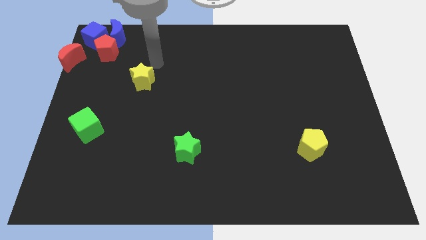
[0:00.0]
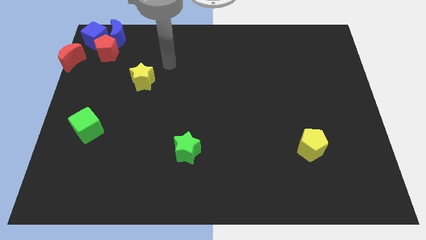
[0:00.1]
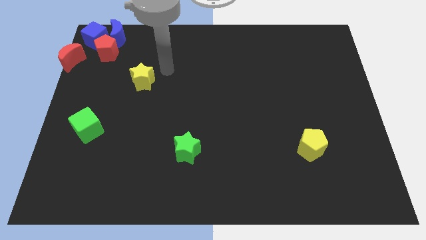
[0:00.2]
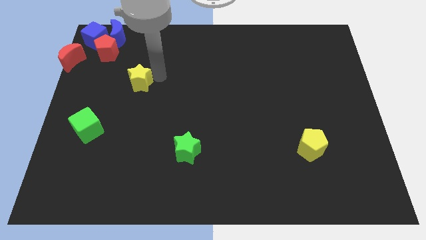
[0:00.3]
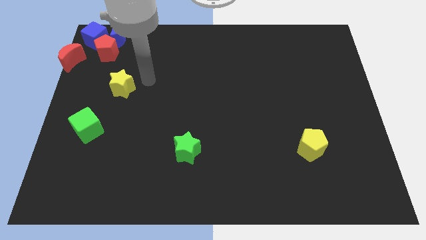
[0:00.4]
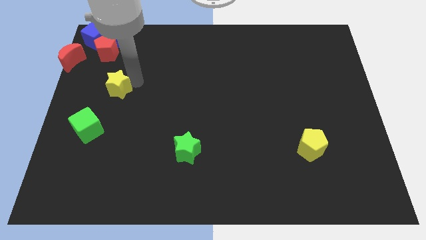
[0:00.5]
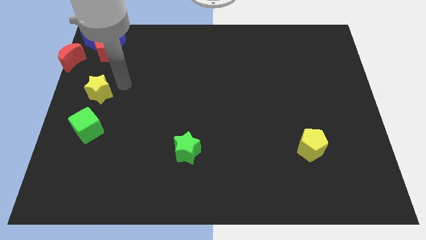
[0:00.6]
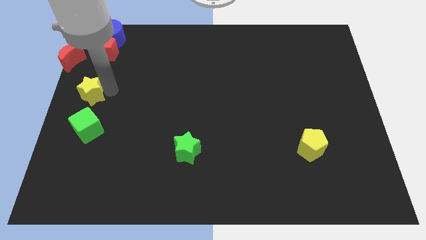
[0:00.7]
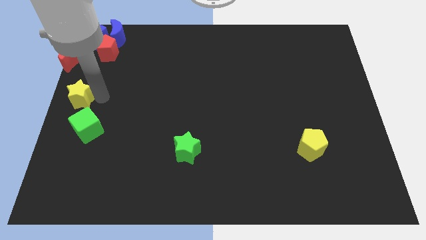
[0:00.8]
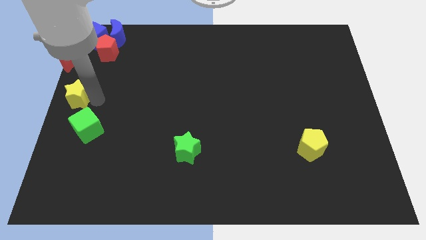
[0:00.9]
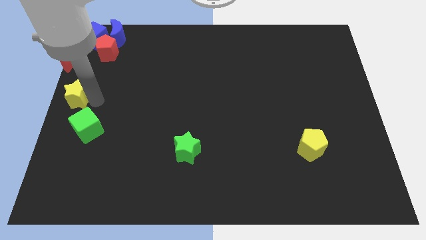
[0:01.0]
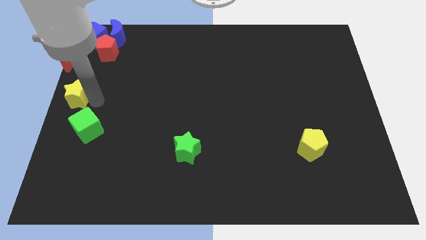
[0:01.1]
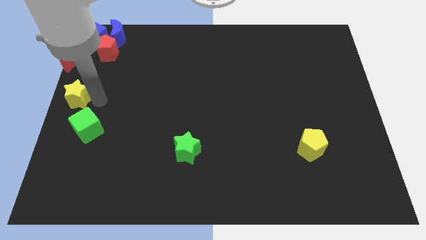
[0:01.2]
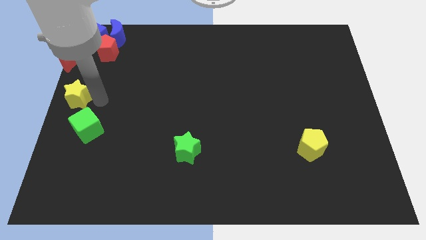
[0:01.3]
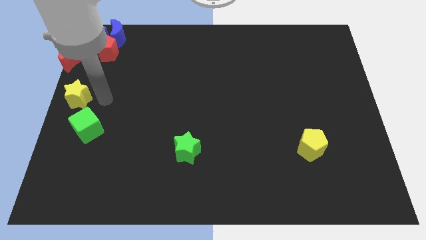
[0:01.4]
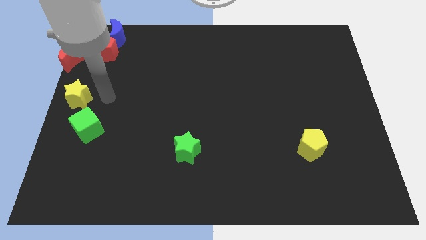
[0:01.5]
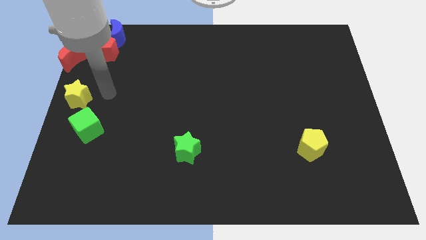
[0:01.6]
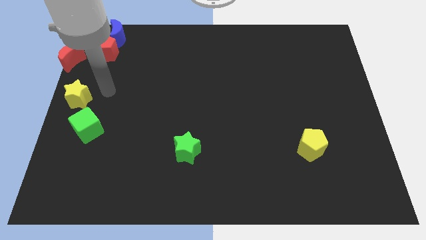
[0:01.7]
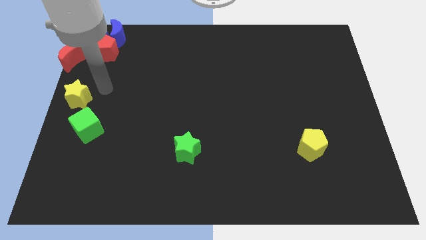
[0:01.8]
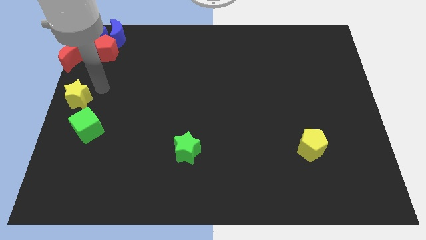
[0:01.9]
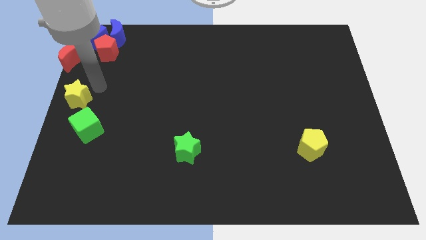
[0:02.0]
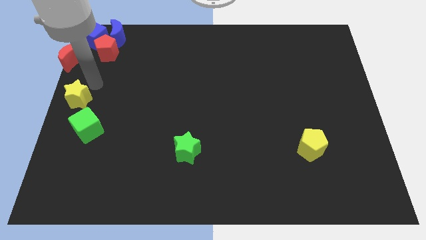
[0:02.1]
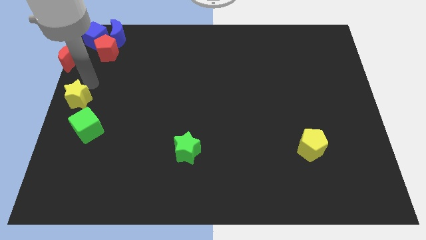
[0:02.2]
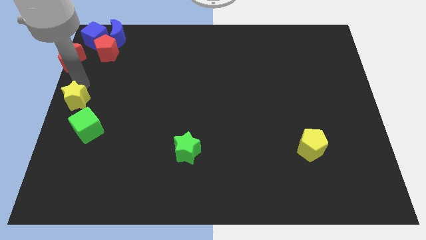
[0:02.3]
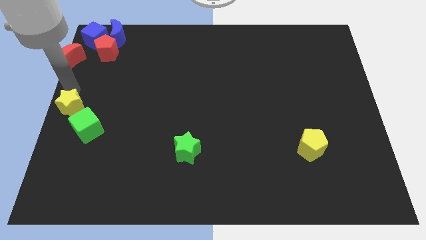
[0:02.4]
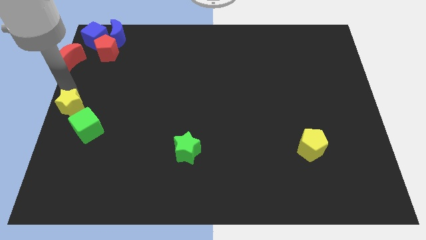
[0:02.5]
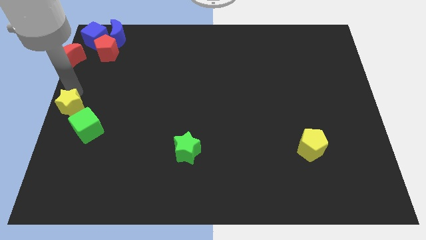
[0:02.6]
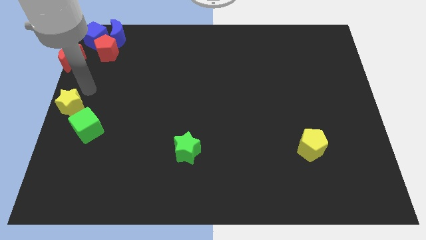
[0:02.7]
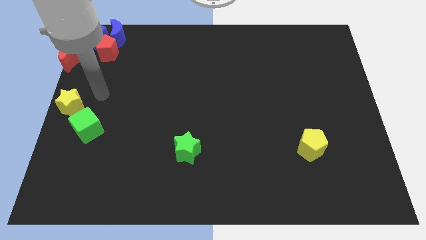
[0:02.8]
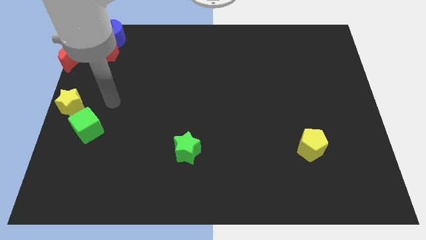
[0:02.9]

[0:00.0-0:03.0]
place yellow star below red crescent

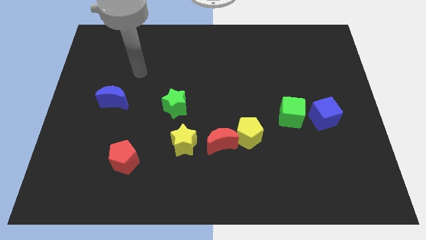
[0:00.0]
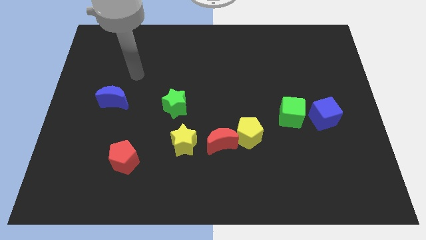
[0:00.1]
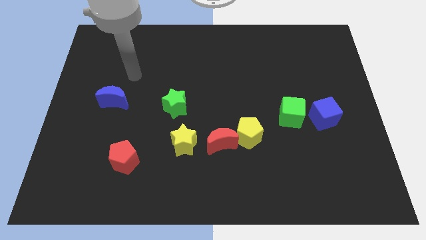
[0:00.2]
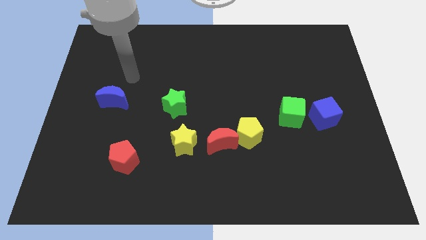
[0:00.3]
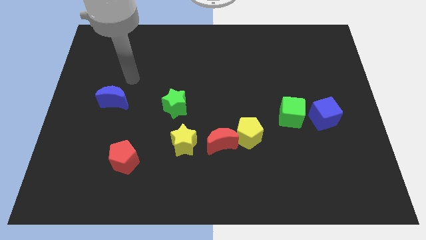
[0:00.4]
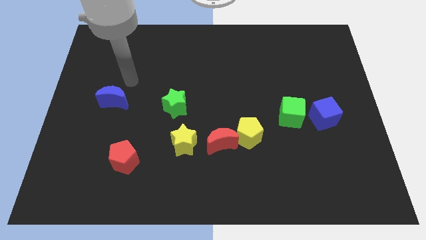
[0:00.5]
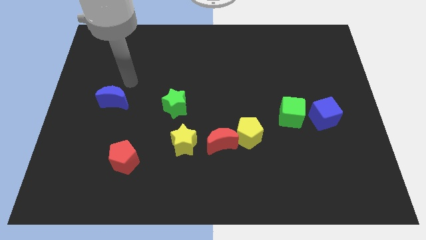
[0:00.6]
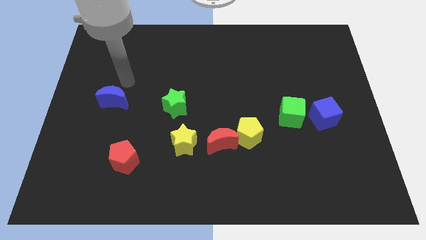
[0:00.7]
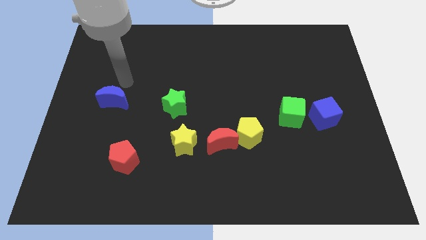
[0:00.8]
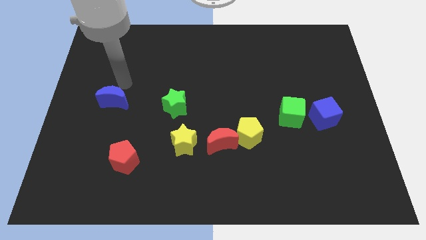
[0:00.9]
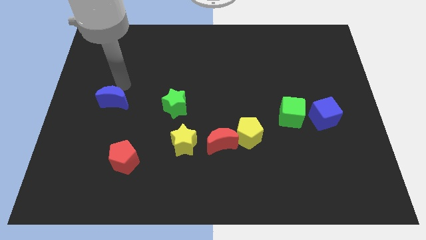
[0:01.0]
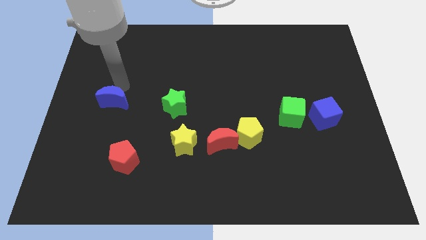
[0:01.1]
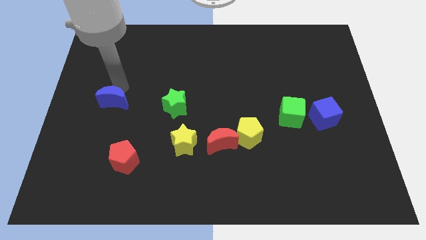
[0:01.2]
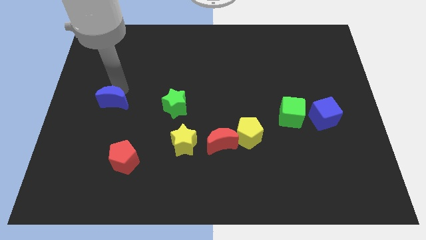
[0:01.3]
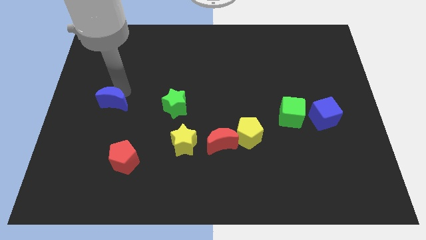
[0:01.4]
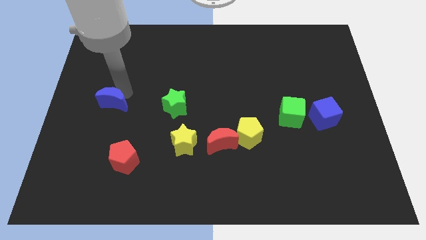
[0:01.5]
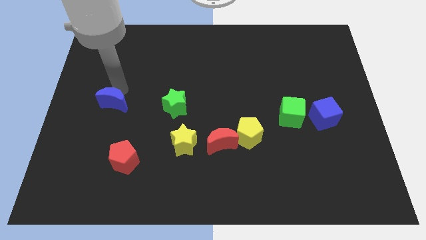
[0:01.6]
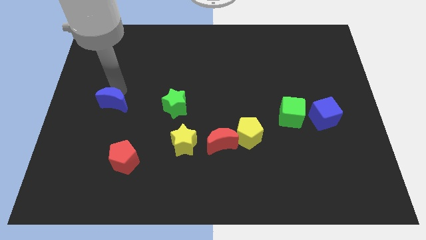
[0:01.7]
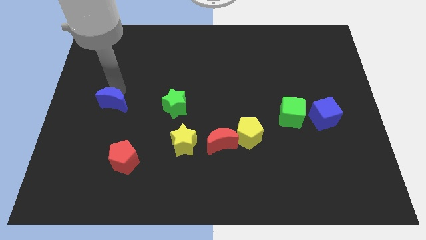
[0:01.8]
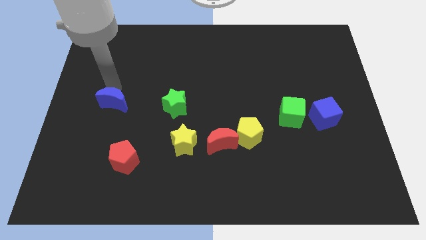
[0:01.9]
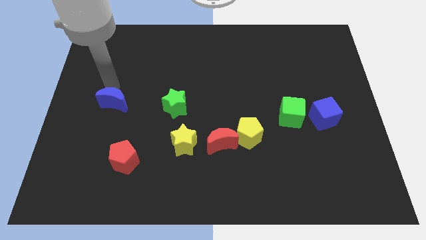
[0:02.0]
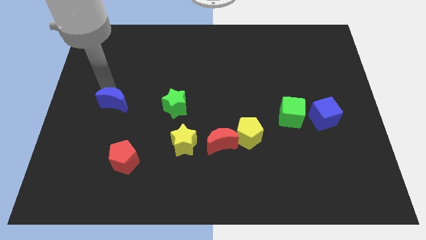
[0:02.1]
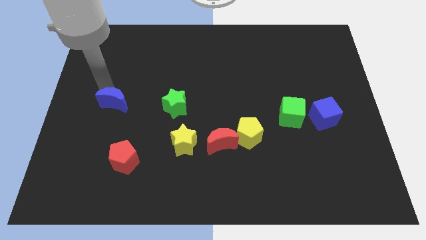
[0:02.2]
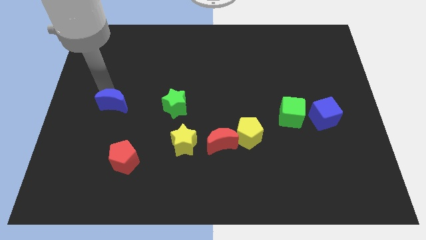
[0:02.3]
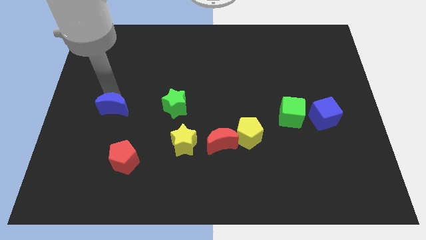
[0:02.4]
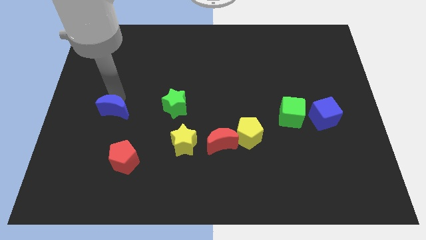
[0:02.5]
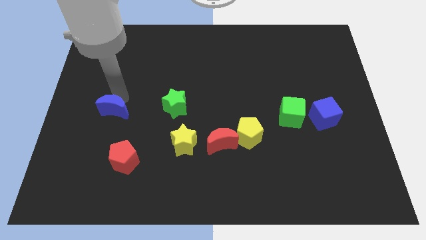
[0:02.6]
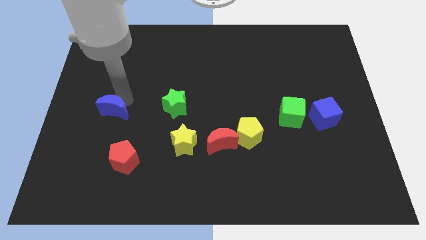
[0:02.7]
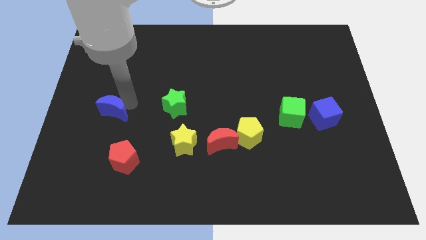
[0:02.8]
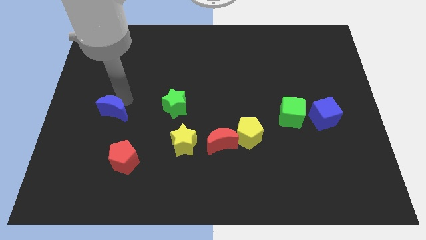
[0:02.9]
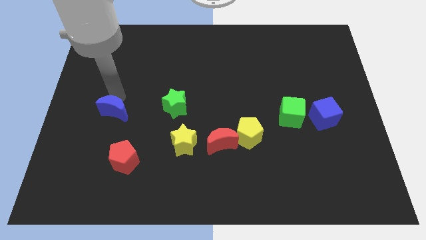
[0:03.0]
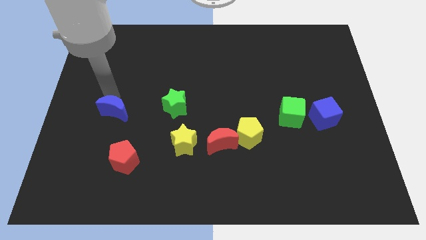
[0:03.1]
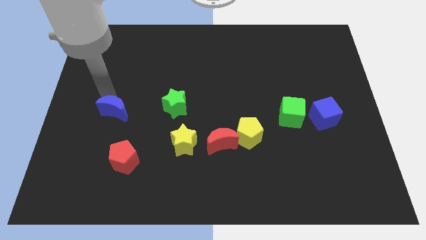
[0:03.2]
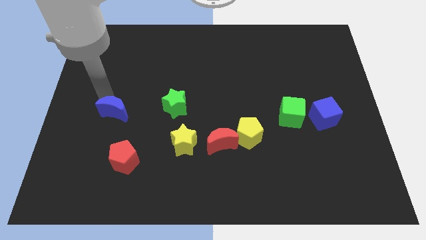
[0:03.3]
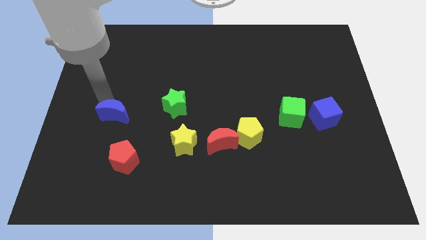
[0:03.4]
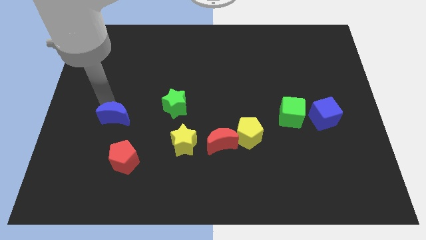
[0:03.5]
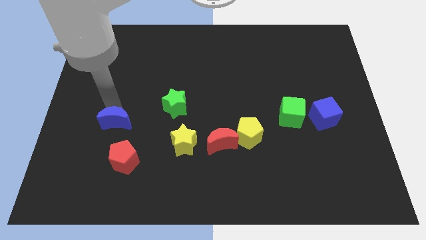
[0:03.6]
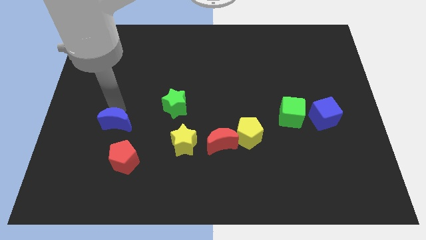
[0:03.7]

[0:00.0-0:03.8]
move the blue crescent towards the red pentagon

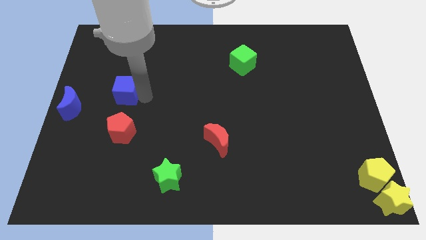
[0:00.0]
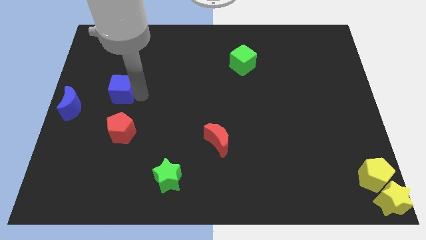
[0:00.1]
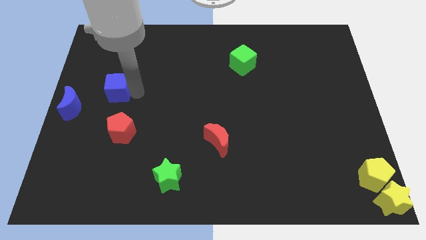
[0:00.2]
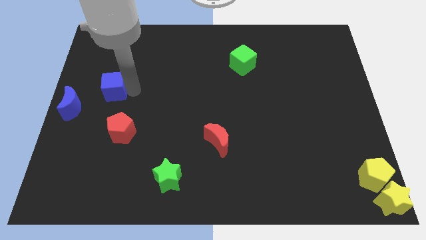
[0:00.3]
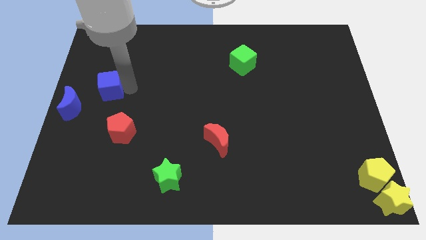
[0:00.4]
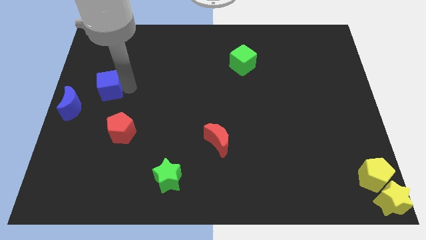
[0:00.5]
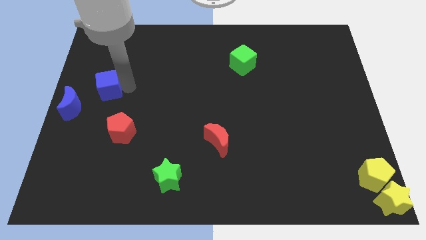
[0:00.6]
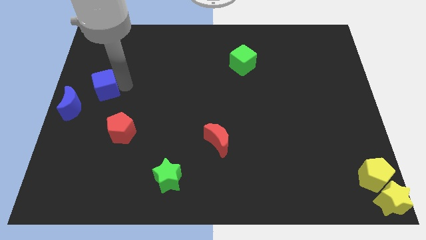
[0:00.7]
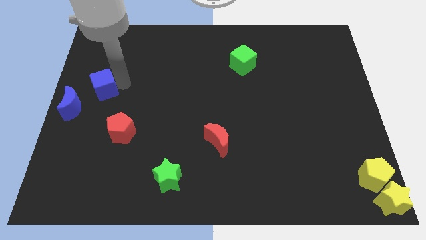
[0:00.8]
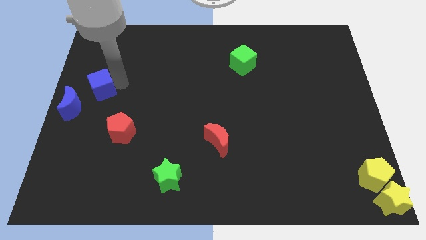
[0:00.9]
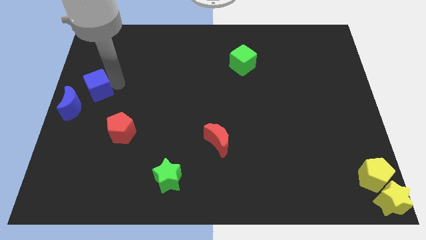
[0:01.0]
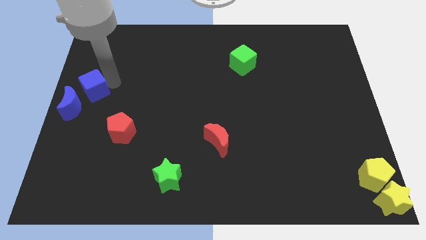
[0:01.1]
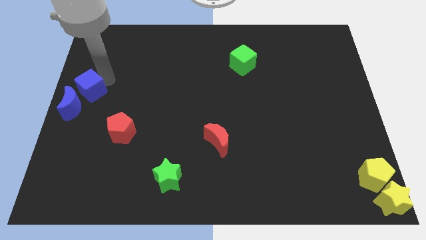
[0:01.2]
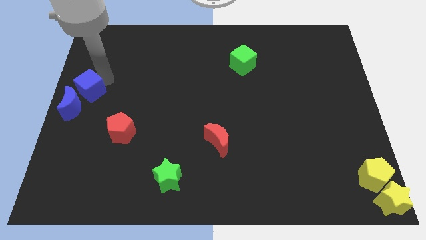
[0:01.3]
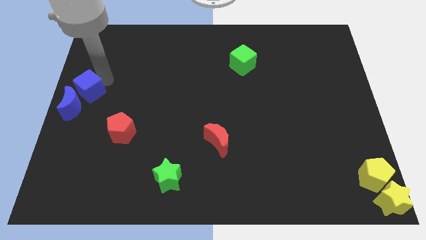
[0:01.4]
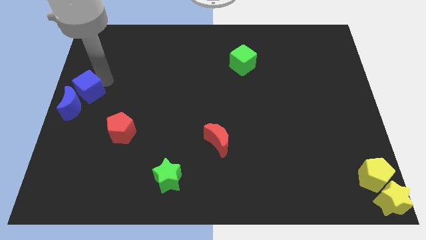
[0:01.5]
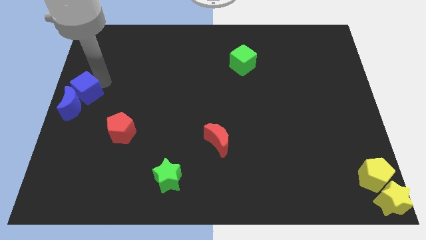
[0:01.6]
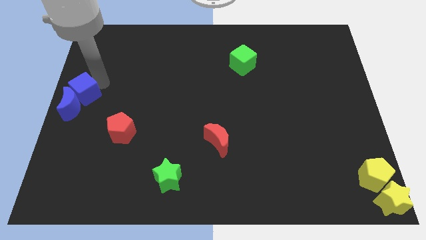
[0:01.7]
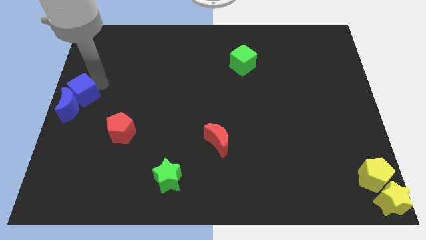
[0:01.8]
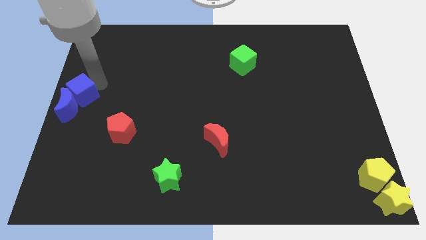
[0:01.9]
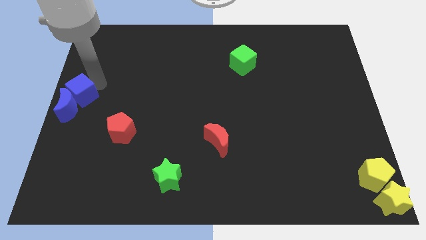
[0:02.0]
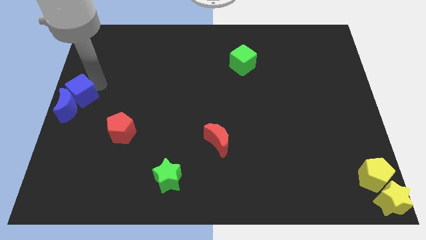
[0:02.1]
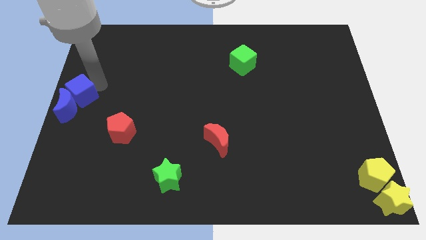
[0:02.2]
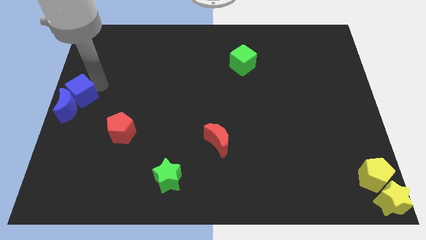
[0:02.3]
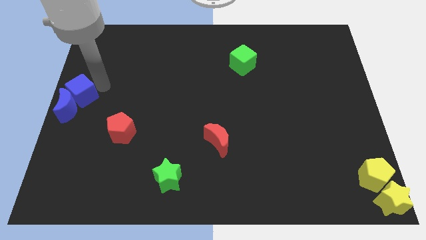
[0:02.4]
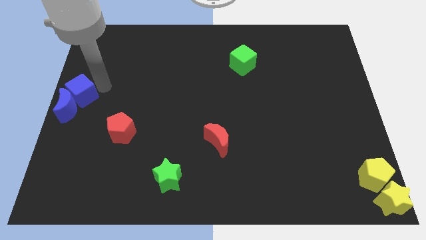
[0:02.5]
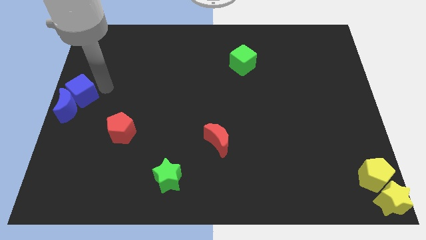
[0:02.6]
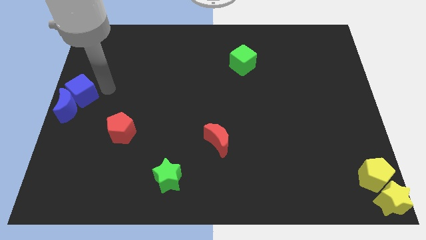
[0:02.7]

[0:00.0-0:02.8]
push the blue cube into the blue moon
